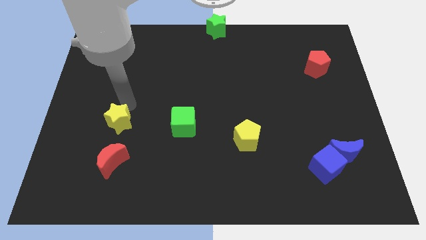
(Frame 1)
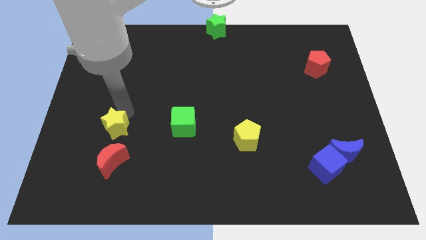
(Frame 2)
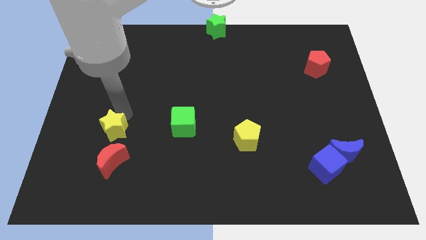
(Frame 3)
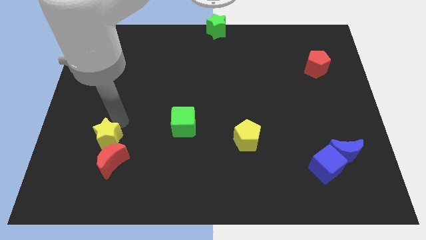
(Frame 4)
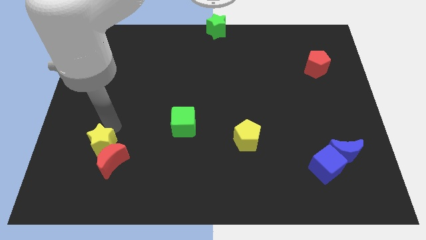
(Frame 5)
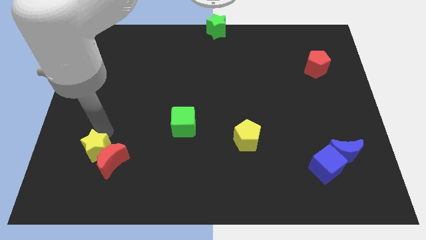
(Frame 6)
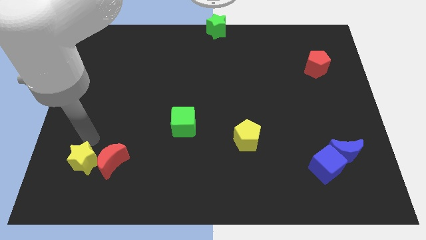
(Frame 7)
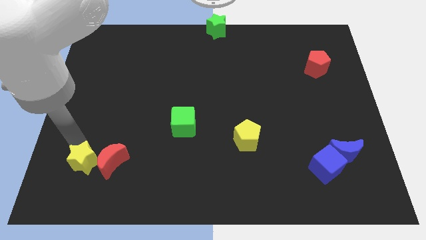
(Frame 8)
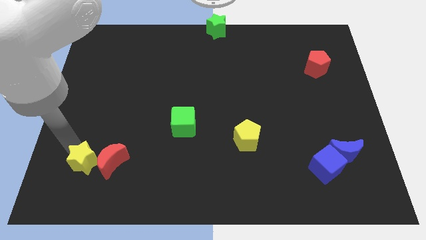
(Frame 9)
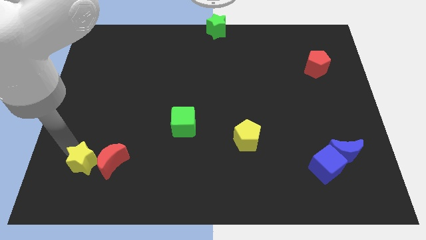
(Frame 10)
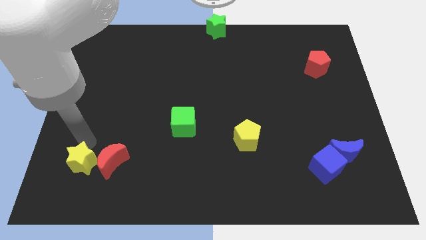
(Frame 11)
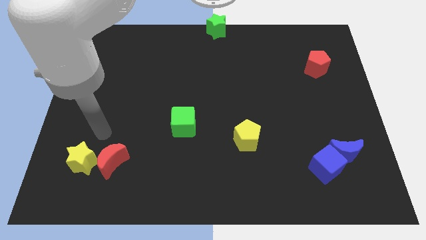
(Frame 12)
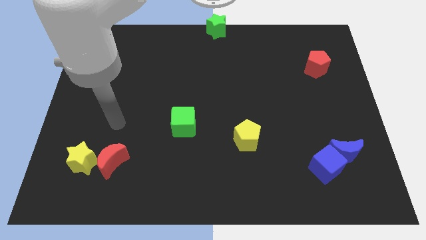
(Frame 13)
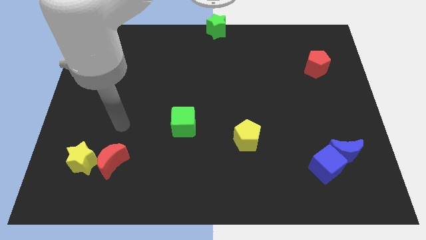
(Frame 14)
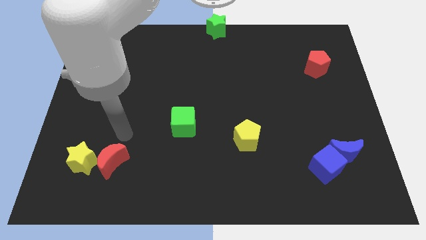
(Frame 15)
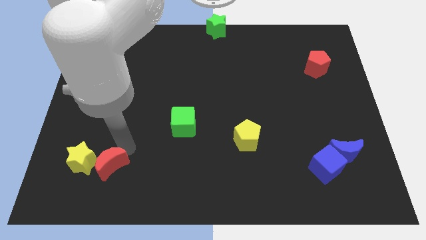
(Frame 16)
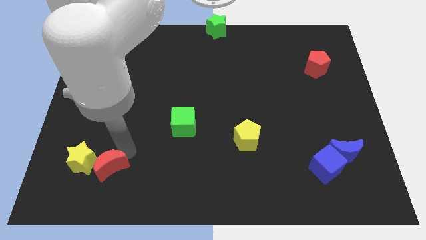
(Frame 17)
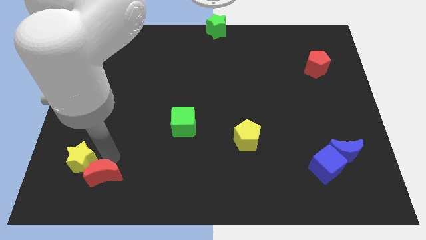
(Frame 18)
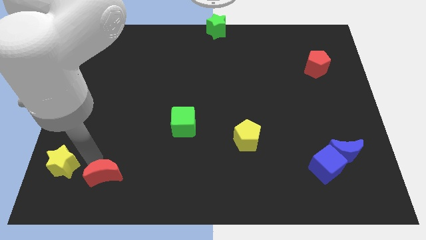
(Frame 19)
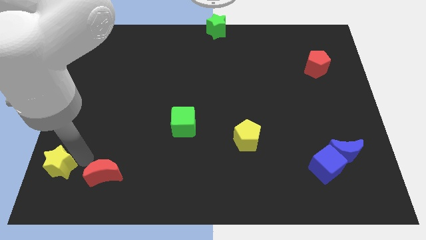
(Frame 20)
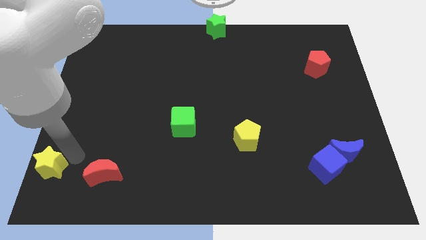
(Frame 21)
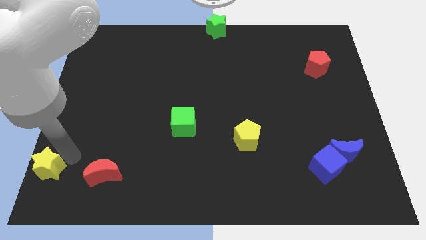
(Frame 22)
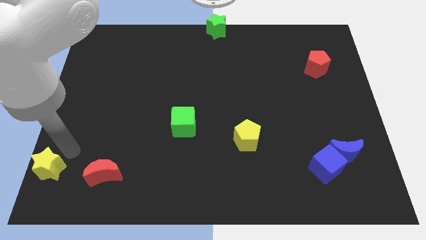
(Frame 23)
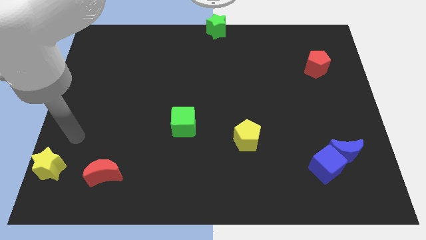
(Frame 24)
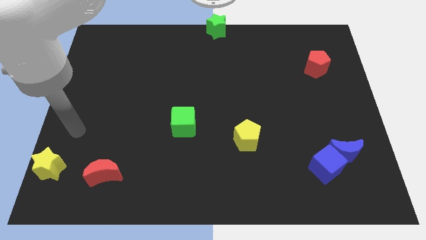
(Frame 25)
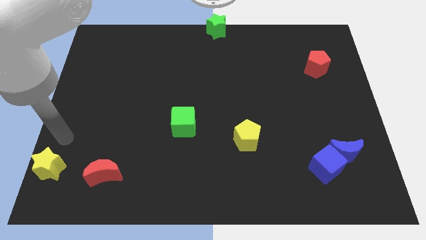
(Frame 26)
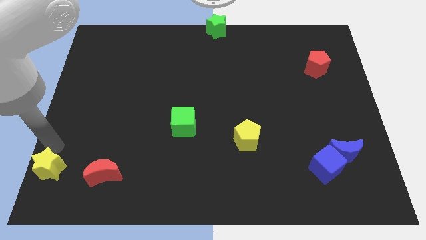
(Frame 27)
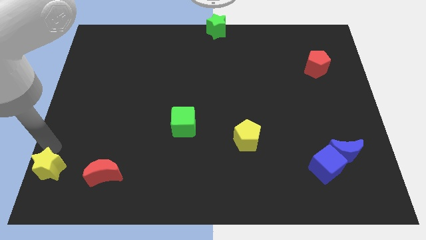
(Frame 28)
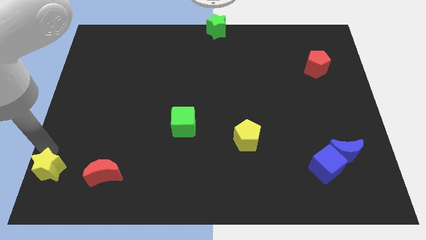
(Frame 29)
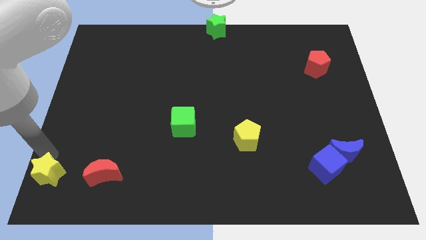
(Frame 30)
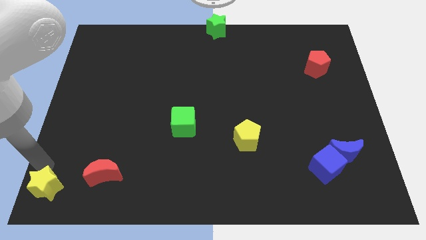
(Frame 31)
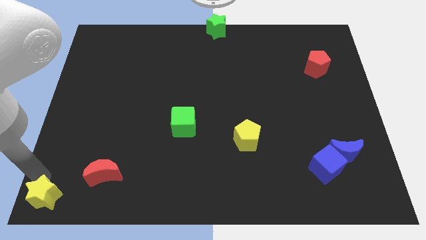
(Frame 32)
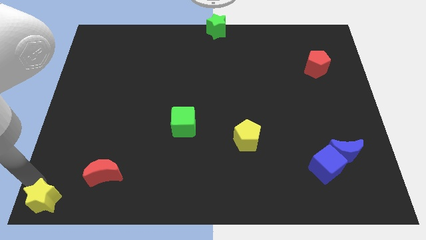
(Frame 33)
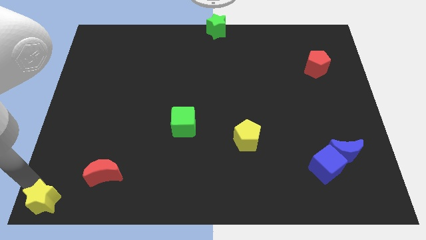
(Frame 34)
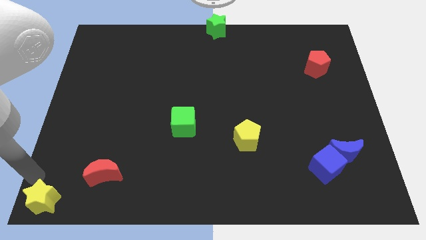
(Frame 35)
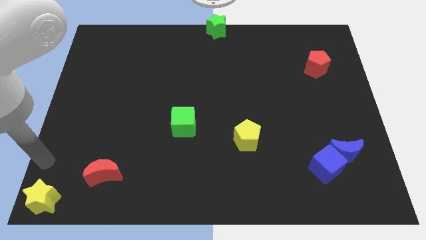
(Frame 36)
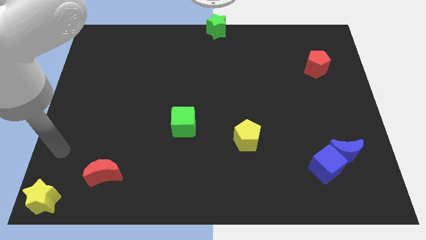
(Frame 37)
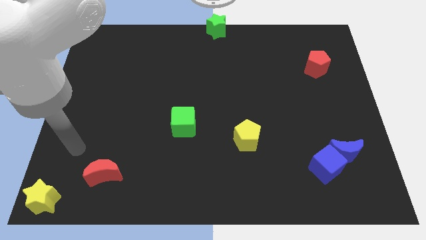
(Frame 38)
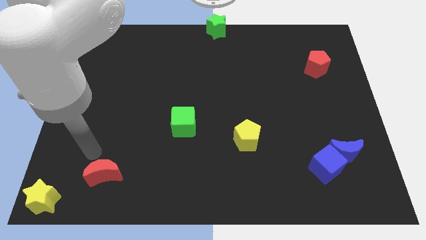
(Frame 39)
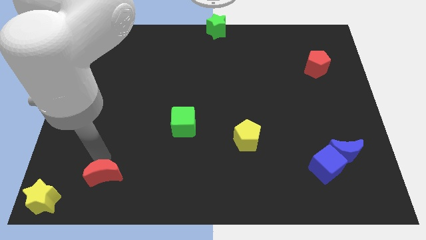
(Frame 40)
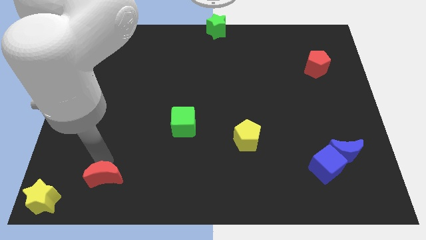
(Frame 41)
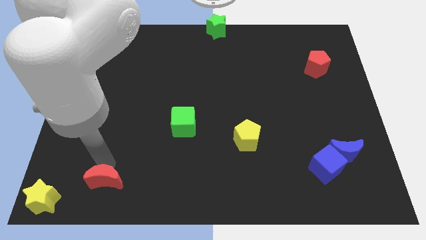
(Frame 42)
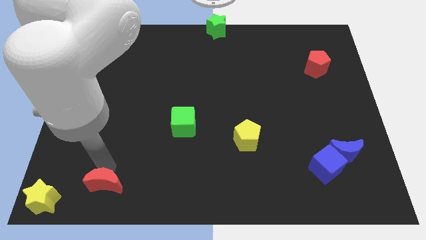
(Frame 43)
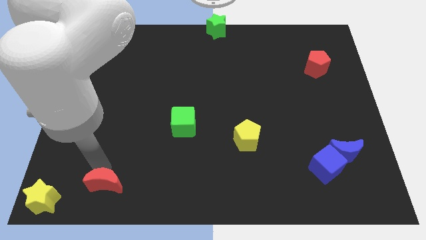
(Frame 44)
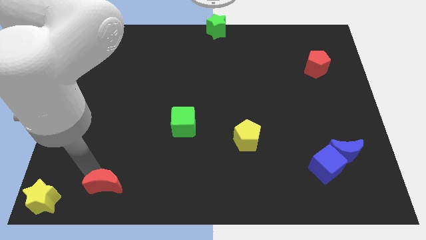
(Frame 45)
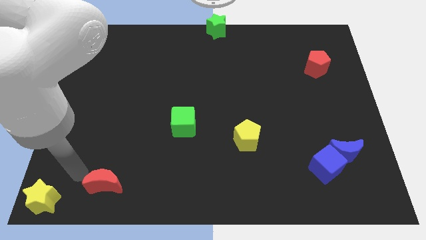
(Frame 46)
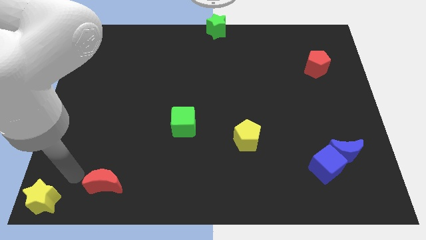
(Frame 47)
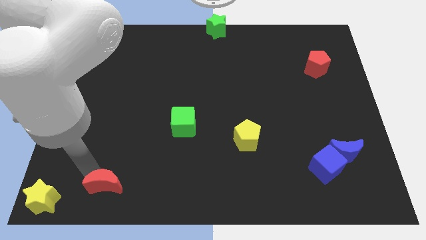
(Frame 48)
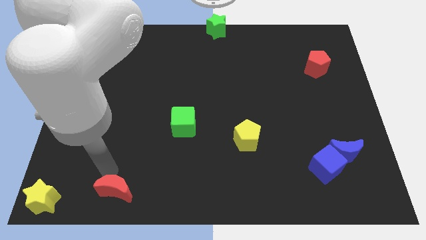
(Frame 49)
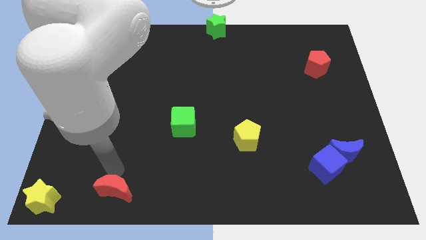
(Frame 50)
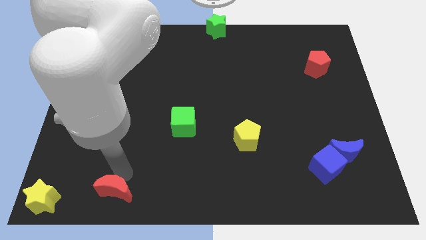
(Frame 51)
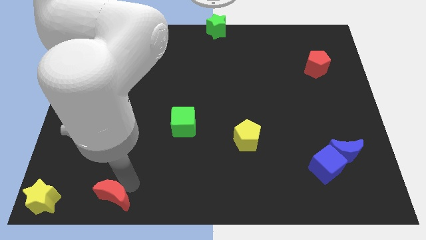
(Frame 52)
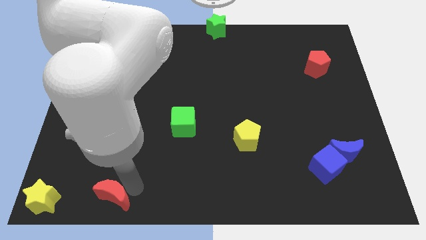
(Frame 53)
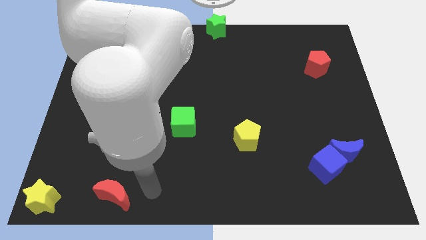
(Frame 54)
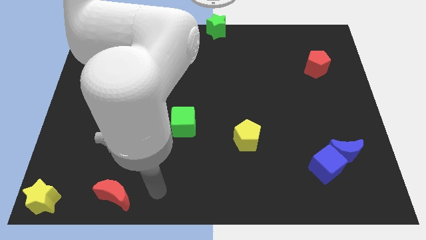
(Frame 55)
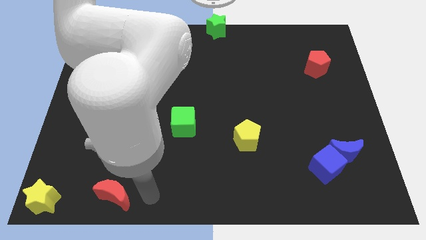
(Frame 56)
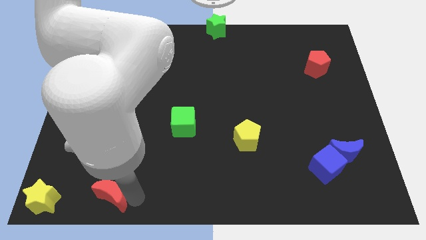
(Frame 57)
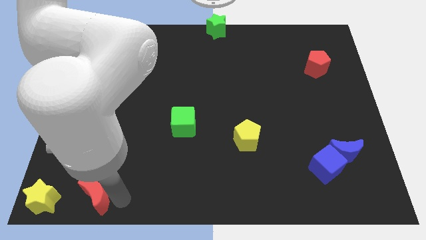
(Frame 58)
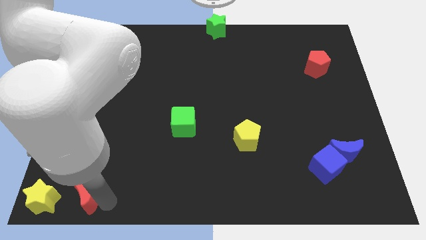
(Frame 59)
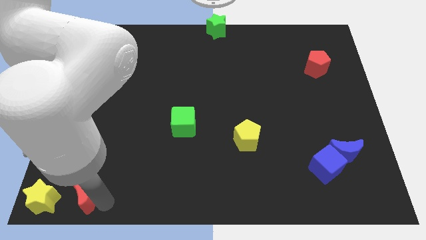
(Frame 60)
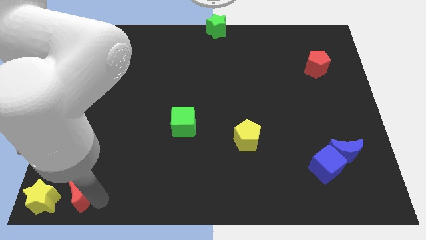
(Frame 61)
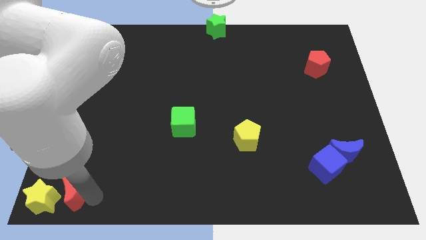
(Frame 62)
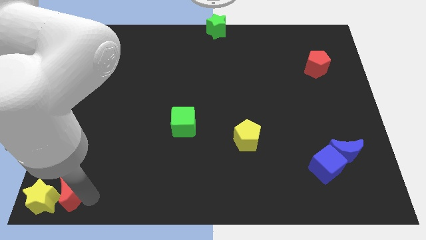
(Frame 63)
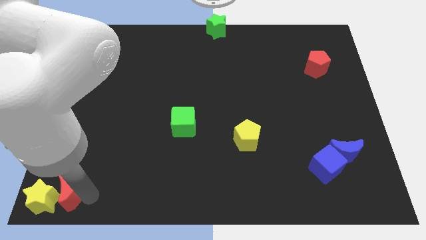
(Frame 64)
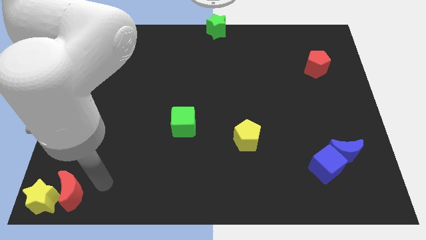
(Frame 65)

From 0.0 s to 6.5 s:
move the yellow star and red crescent to the bottom left corner

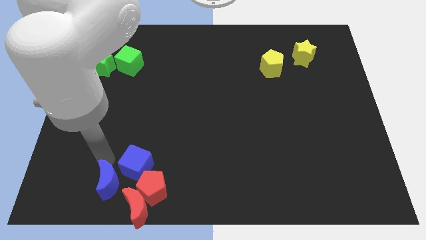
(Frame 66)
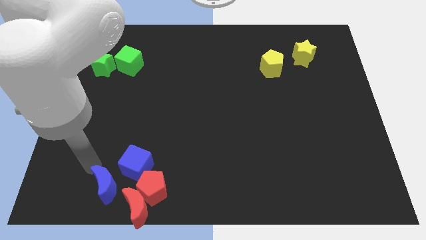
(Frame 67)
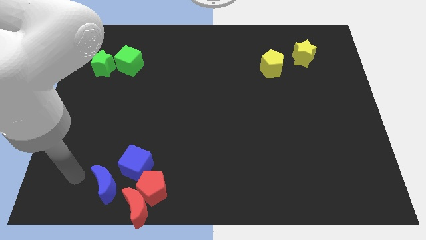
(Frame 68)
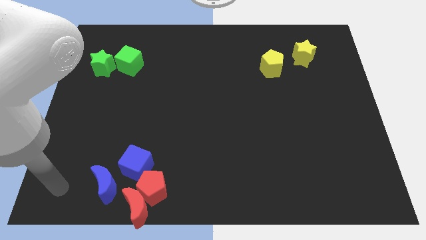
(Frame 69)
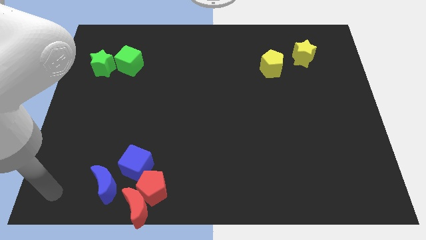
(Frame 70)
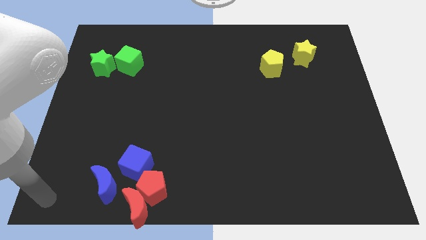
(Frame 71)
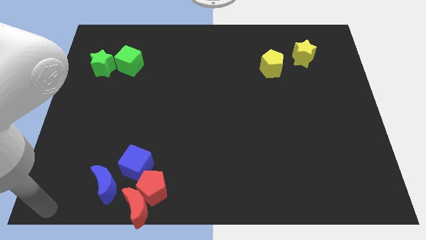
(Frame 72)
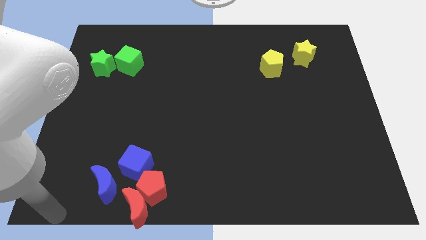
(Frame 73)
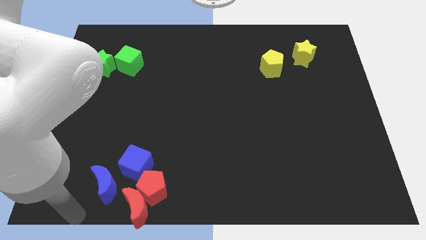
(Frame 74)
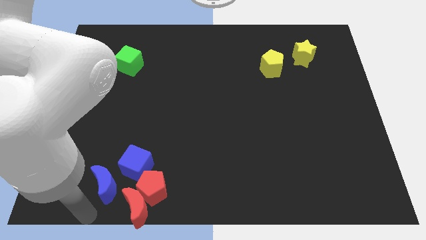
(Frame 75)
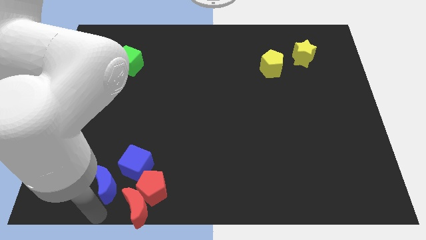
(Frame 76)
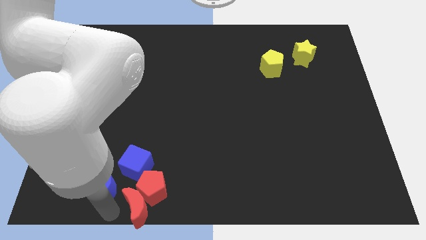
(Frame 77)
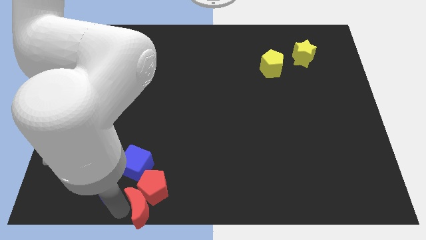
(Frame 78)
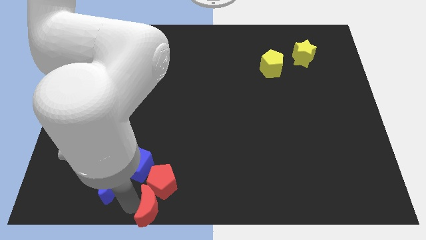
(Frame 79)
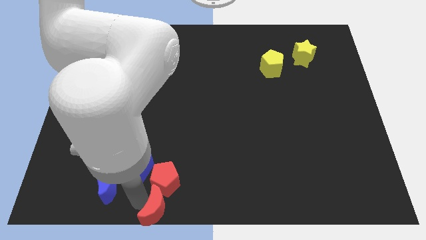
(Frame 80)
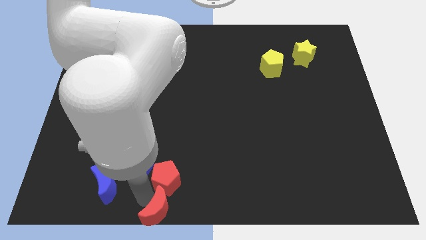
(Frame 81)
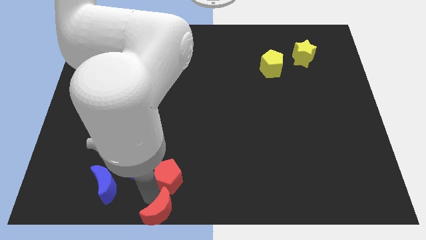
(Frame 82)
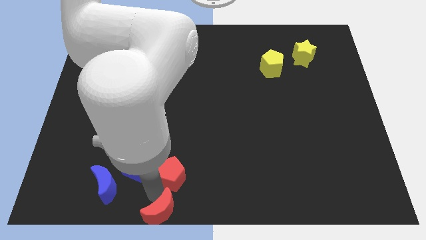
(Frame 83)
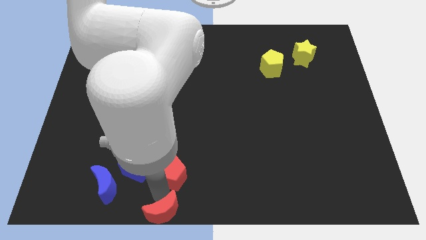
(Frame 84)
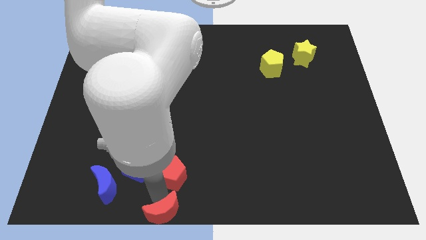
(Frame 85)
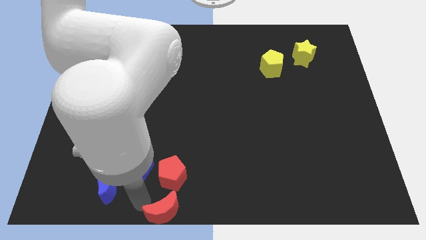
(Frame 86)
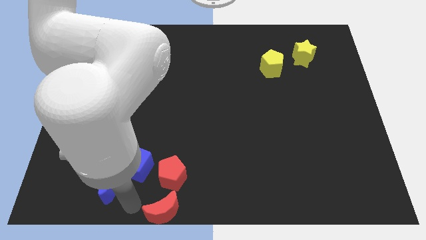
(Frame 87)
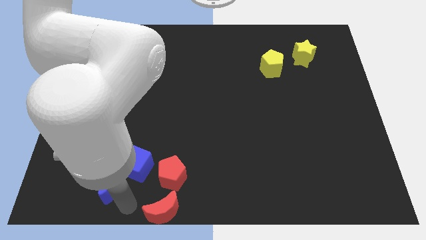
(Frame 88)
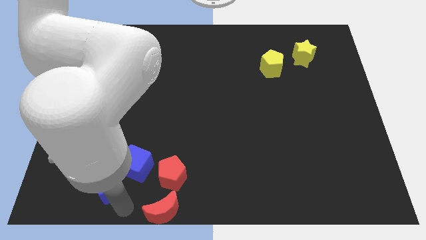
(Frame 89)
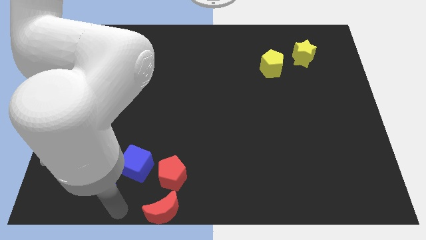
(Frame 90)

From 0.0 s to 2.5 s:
slightly separate the red crescent and red pentagon

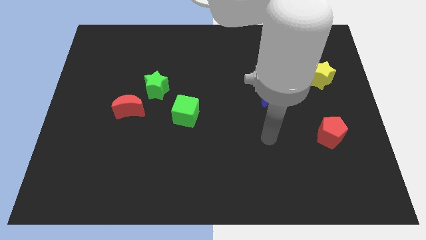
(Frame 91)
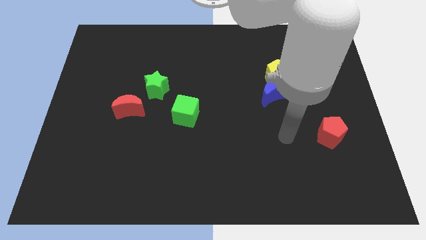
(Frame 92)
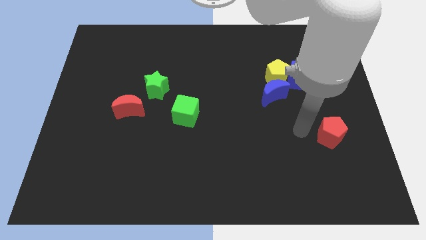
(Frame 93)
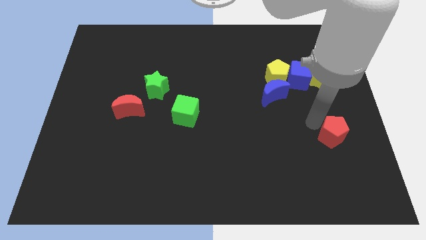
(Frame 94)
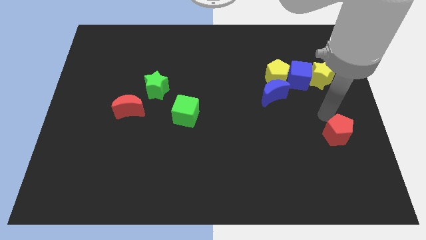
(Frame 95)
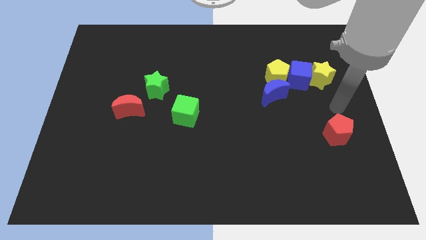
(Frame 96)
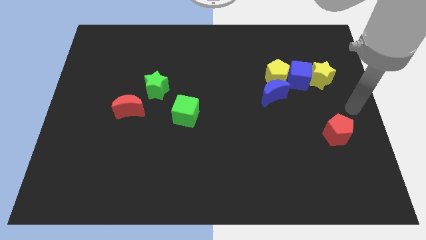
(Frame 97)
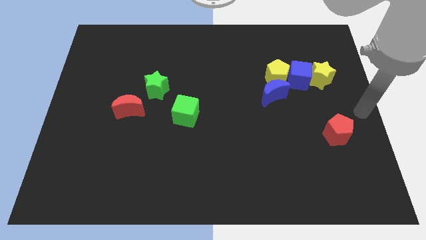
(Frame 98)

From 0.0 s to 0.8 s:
push the red pentagon slightly to the right side of the board
